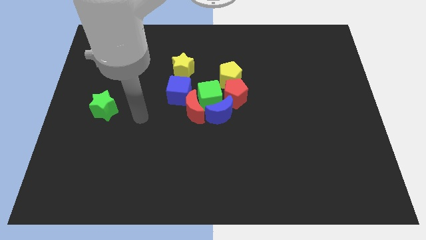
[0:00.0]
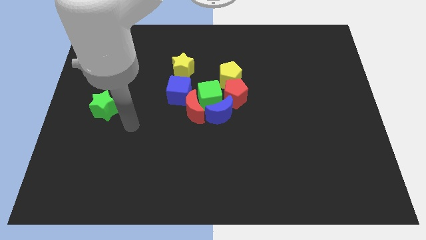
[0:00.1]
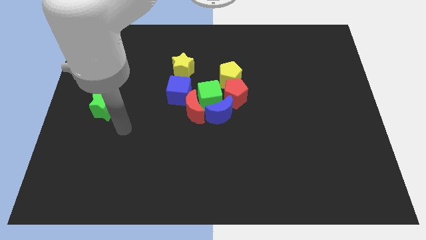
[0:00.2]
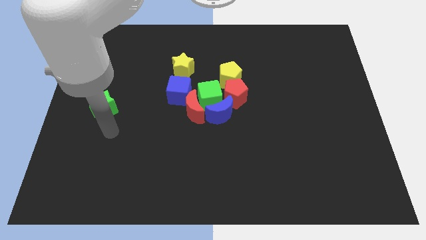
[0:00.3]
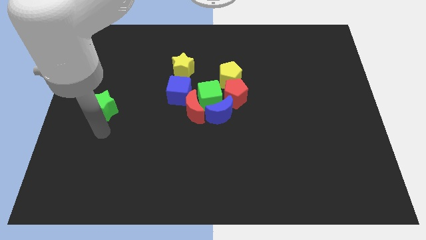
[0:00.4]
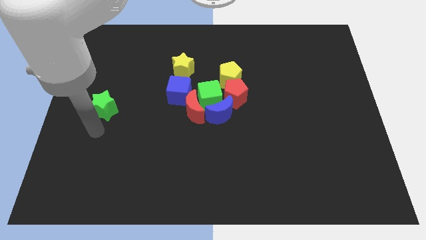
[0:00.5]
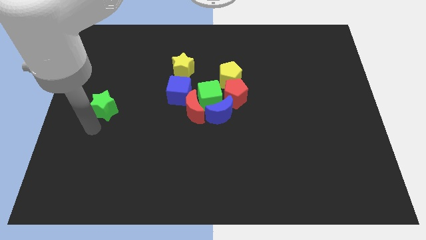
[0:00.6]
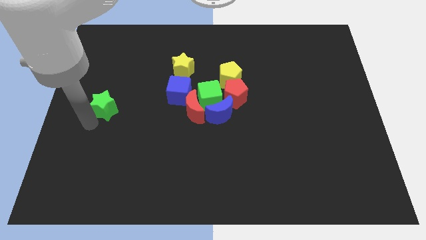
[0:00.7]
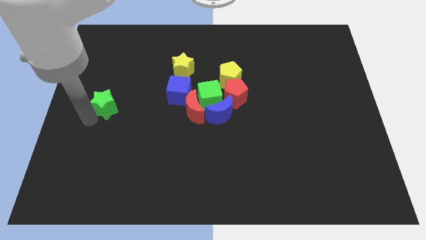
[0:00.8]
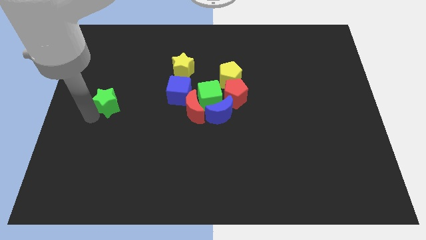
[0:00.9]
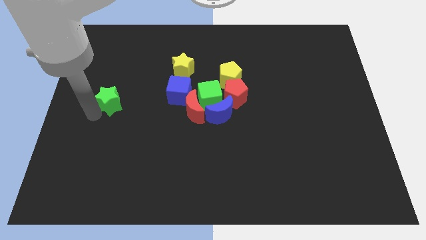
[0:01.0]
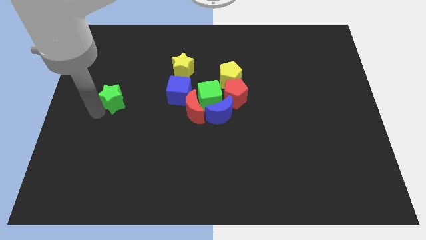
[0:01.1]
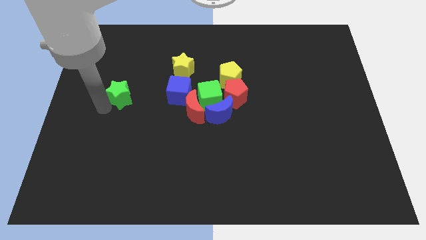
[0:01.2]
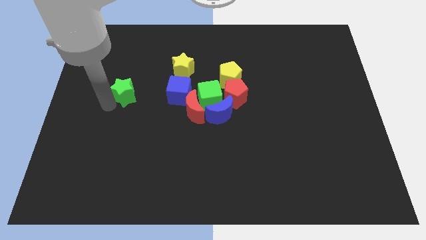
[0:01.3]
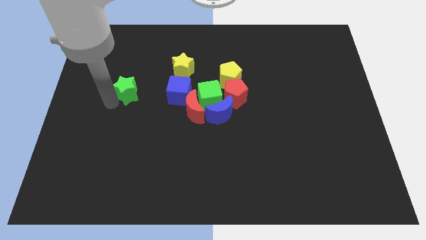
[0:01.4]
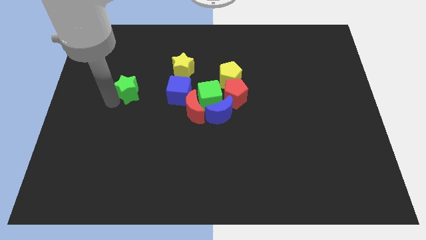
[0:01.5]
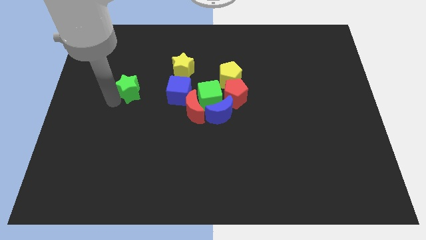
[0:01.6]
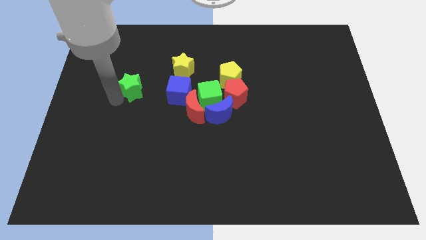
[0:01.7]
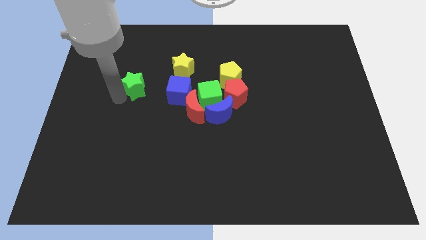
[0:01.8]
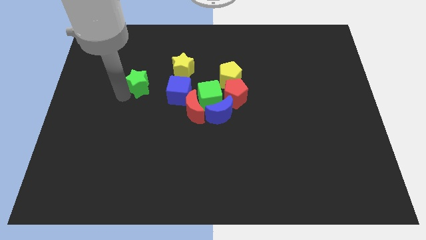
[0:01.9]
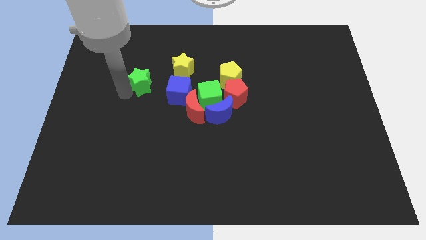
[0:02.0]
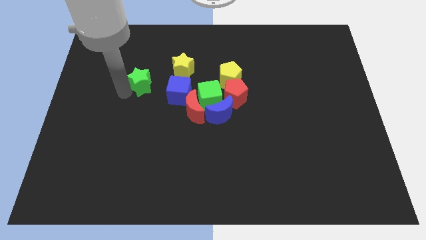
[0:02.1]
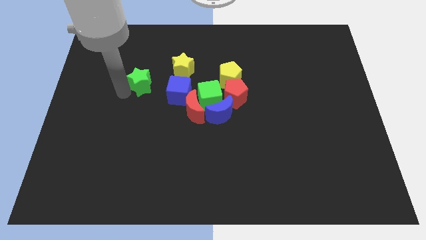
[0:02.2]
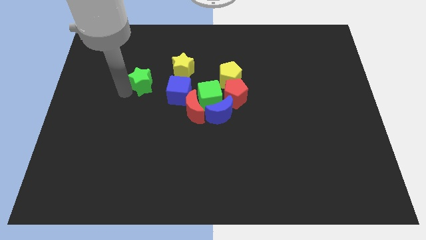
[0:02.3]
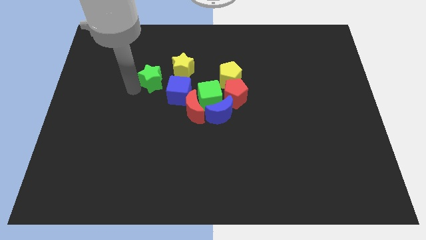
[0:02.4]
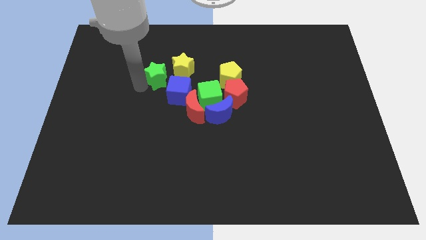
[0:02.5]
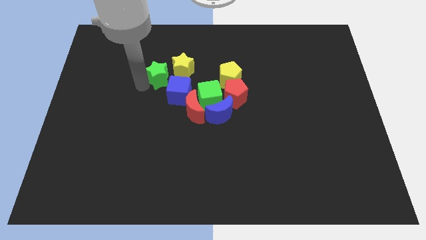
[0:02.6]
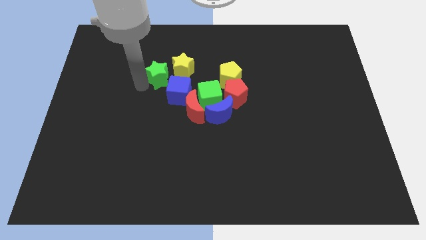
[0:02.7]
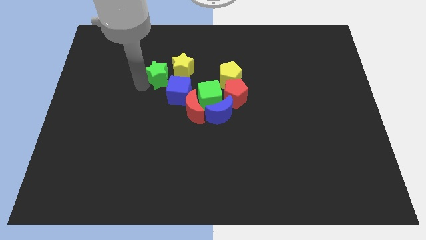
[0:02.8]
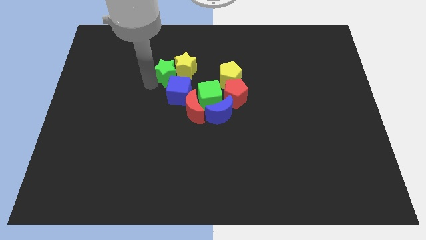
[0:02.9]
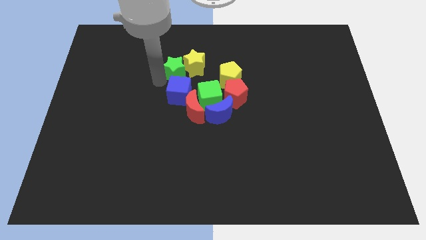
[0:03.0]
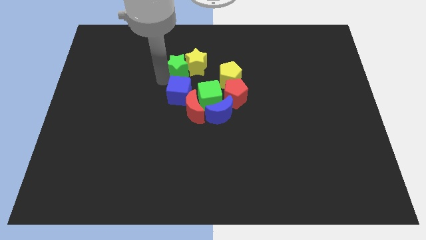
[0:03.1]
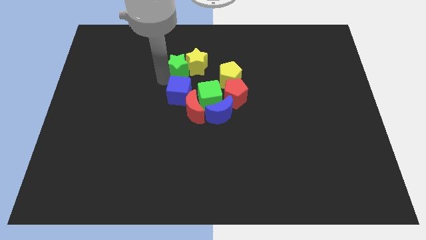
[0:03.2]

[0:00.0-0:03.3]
push the green star into the yellow star

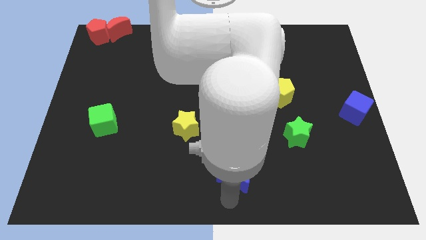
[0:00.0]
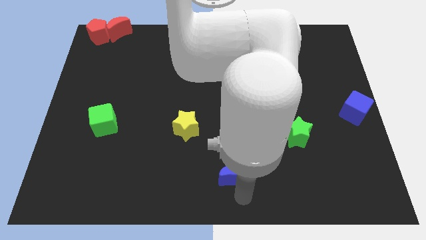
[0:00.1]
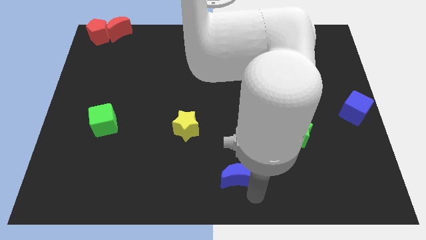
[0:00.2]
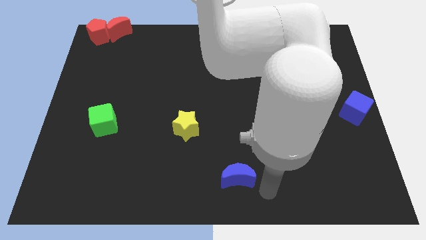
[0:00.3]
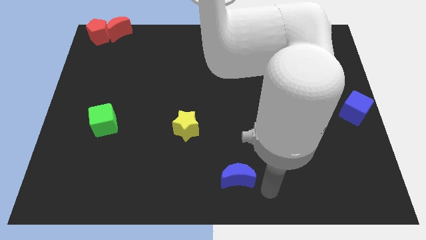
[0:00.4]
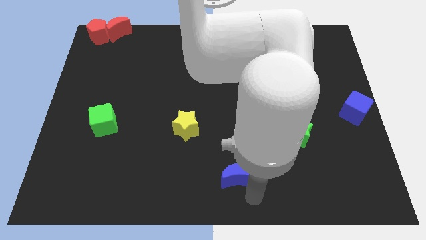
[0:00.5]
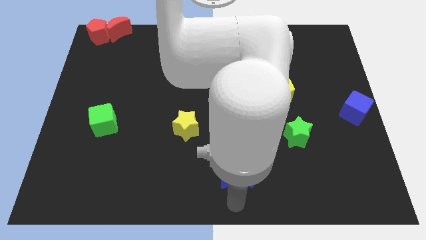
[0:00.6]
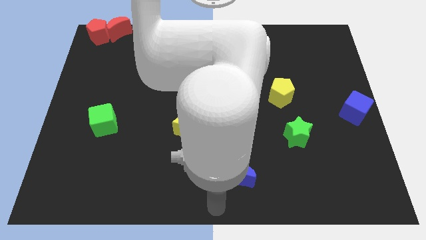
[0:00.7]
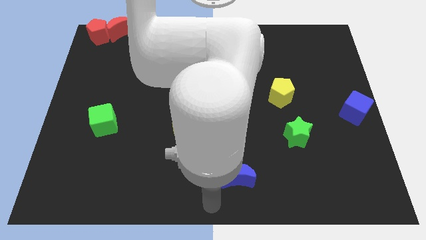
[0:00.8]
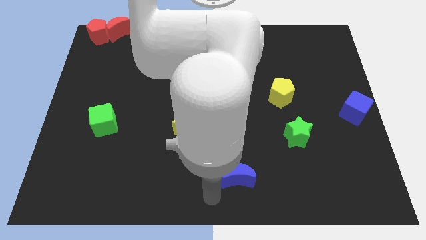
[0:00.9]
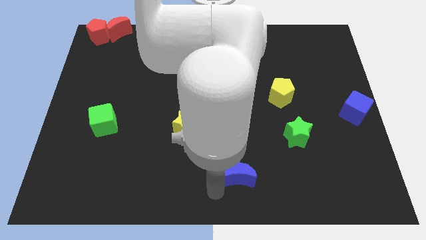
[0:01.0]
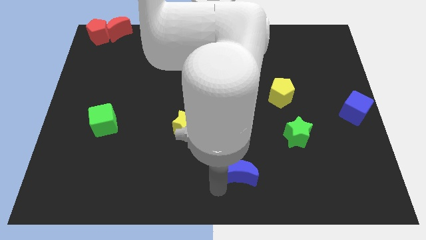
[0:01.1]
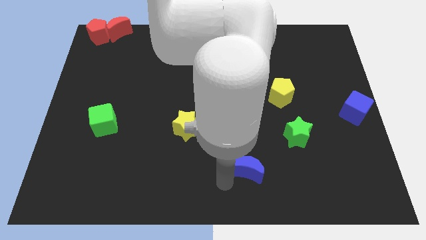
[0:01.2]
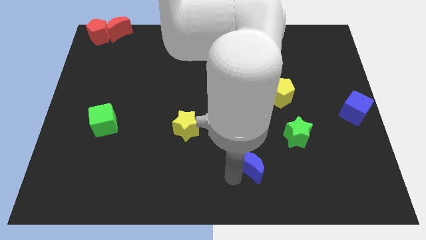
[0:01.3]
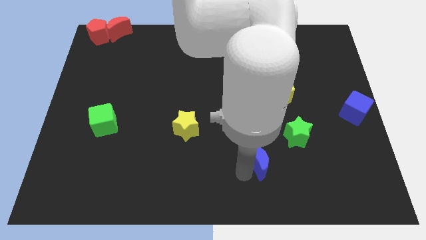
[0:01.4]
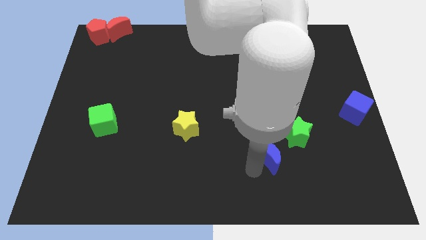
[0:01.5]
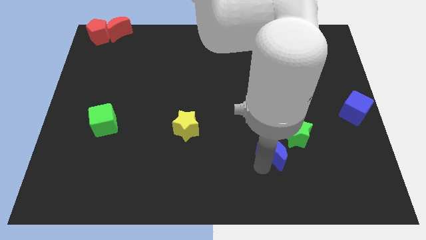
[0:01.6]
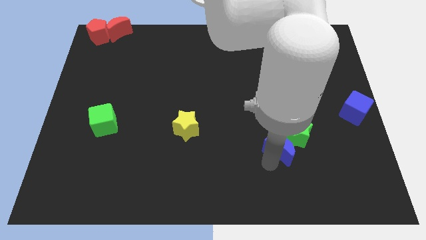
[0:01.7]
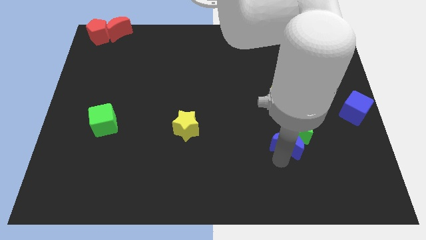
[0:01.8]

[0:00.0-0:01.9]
push blue crescent below green star

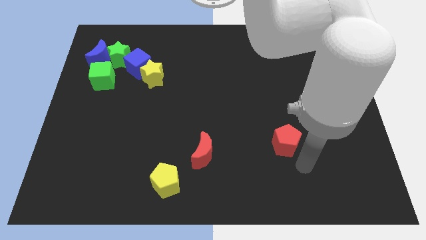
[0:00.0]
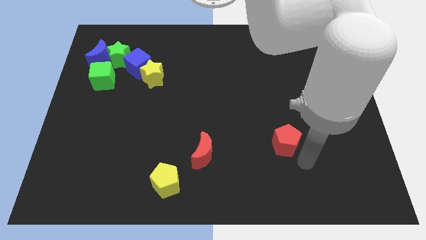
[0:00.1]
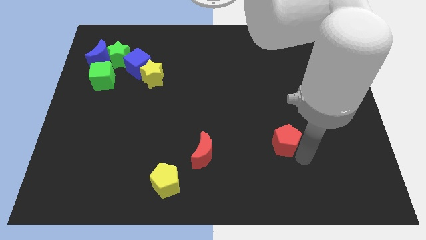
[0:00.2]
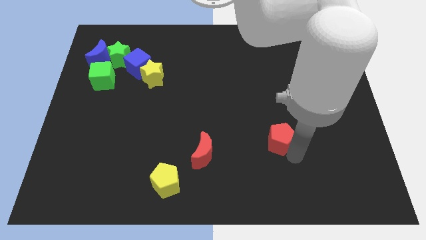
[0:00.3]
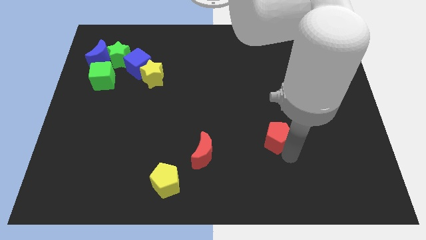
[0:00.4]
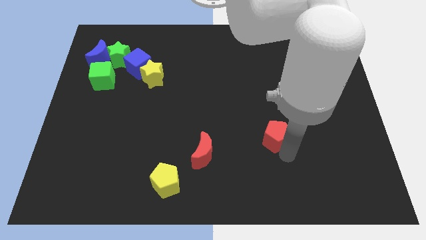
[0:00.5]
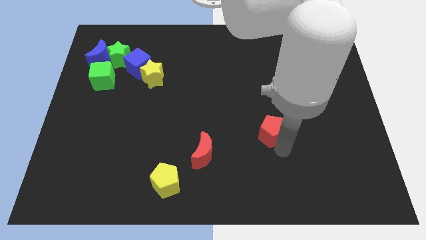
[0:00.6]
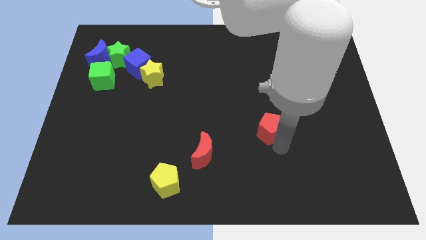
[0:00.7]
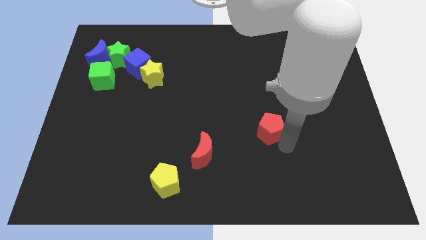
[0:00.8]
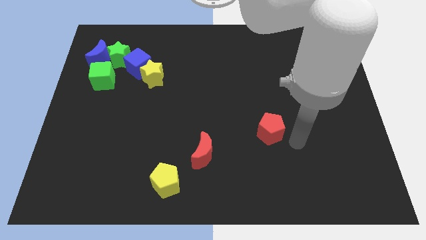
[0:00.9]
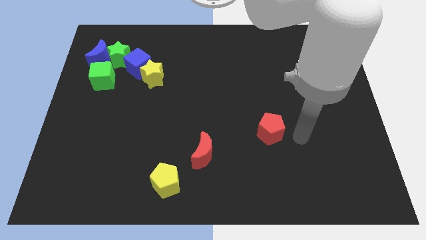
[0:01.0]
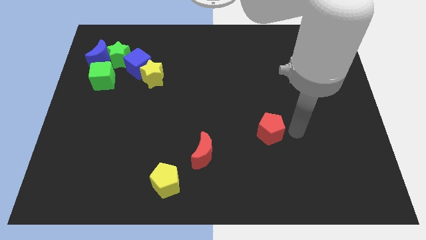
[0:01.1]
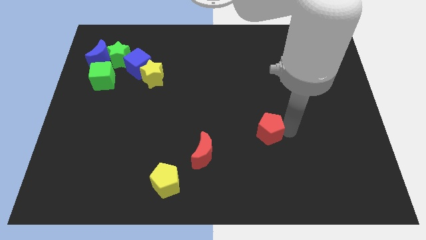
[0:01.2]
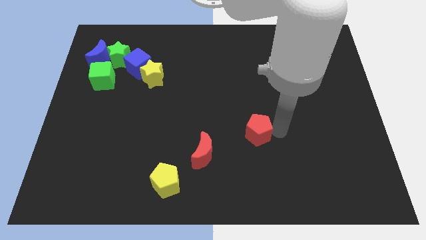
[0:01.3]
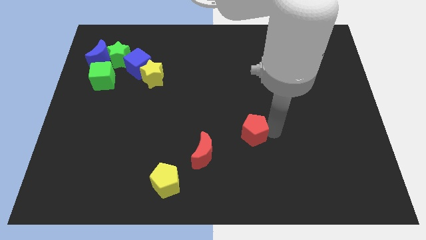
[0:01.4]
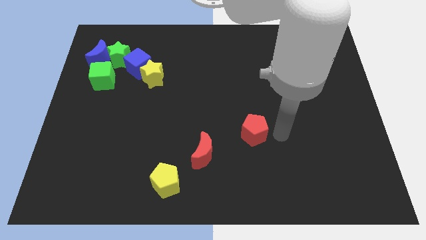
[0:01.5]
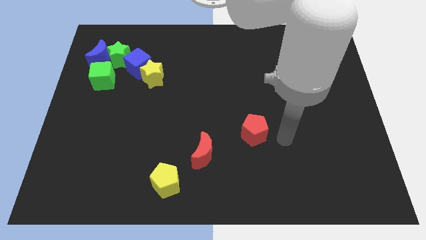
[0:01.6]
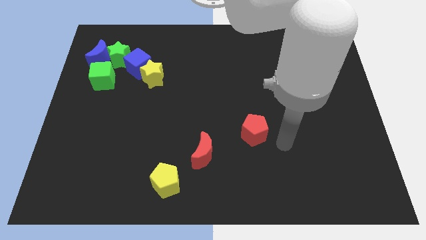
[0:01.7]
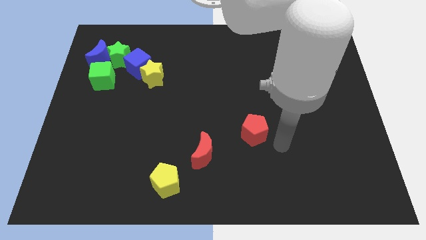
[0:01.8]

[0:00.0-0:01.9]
place the red pentagon diagonal to the red moon

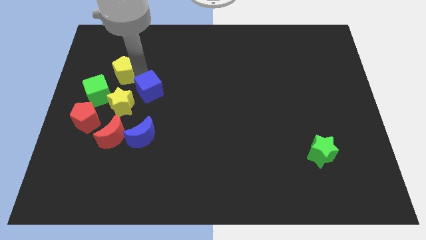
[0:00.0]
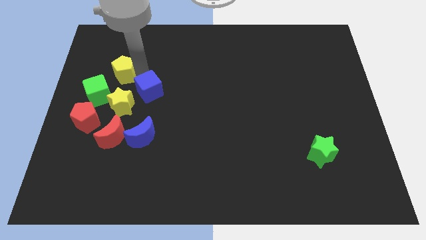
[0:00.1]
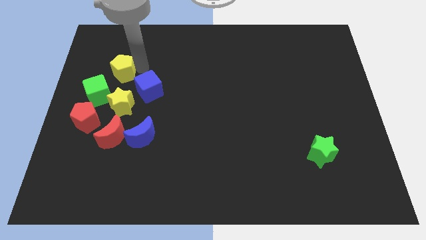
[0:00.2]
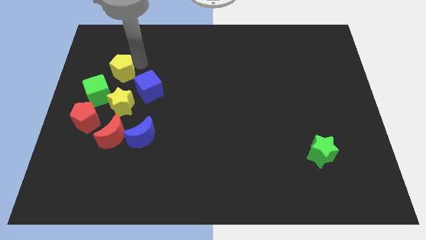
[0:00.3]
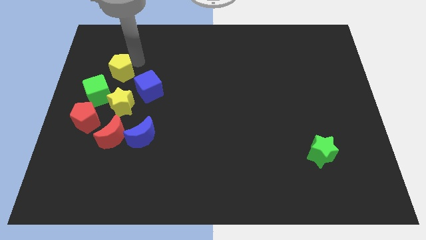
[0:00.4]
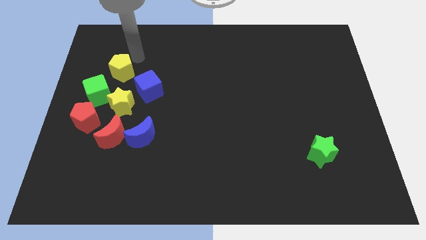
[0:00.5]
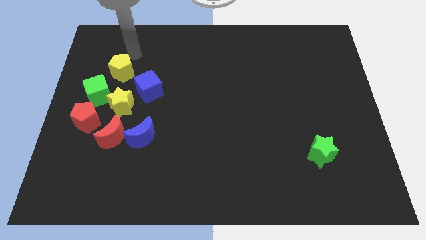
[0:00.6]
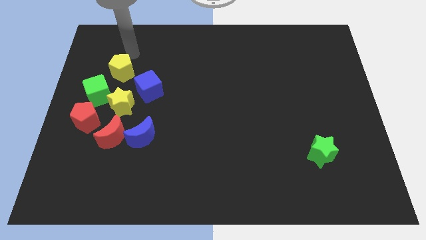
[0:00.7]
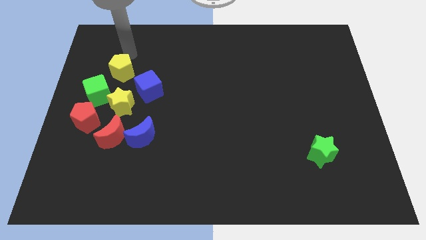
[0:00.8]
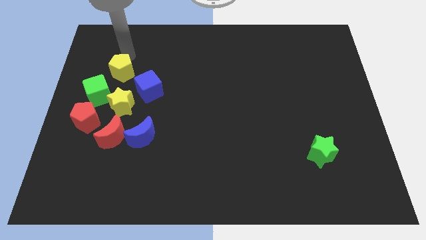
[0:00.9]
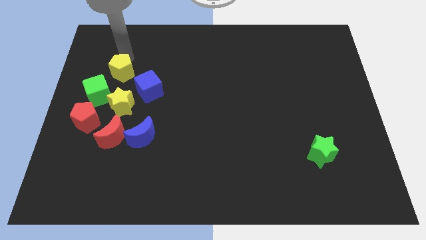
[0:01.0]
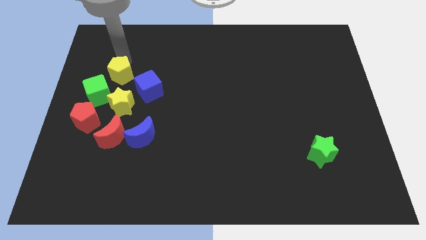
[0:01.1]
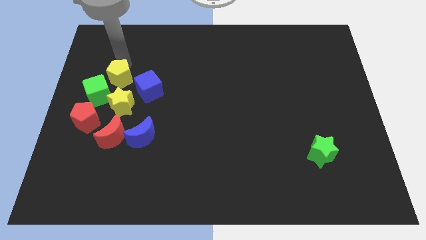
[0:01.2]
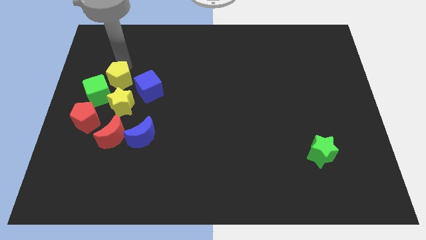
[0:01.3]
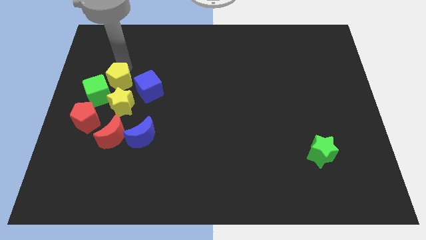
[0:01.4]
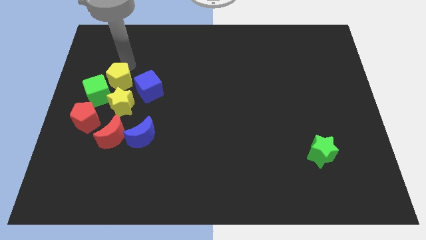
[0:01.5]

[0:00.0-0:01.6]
put the yellow pentagon at the top of yellow star

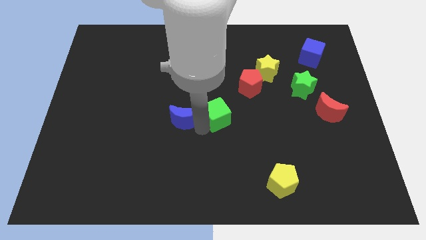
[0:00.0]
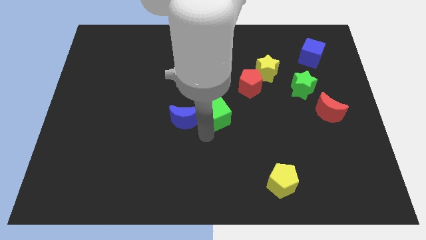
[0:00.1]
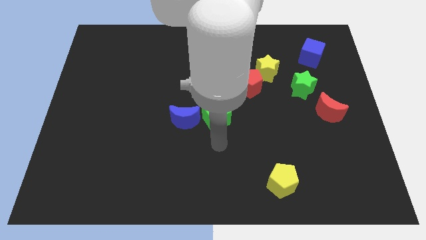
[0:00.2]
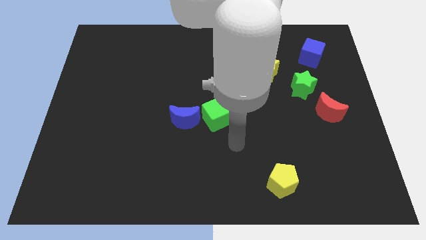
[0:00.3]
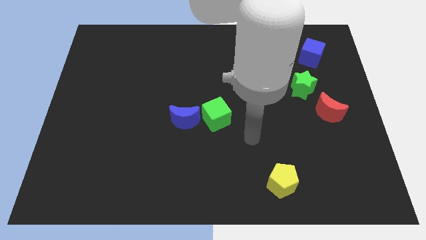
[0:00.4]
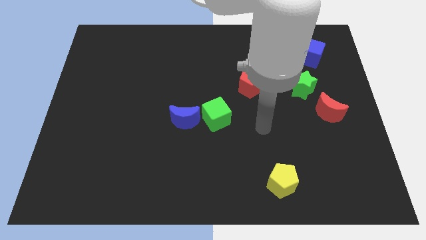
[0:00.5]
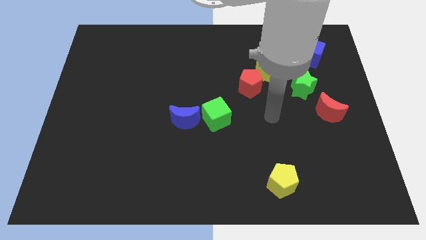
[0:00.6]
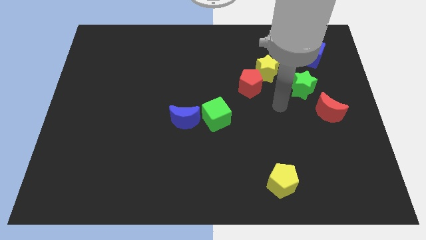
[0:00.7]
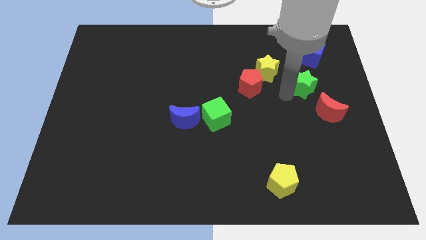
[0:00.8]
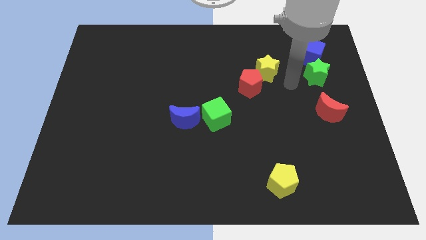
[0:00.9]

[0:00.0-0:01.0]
touch the bottom of green star
